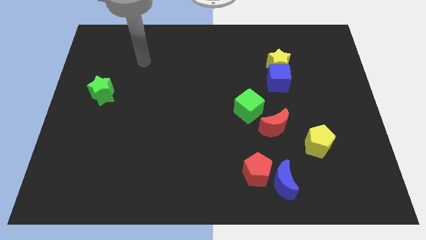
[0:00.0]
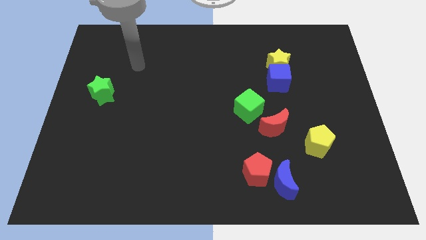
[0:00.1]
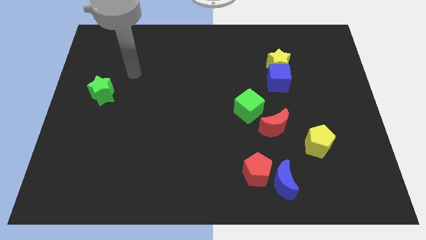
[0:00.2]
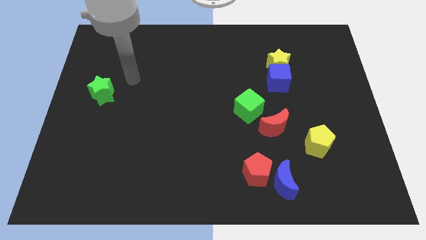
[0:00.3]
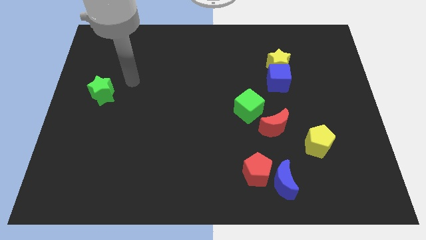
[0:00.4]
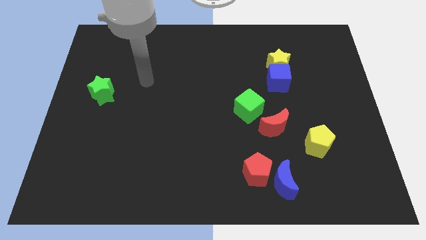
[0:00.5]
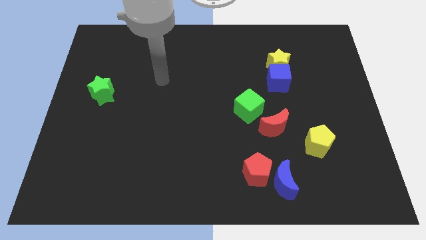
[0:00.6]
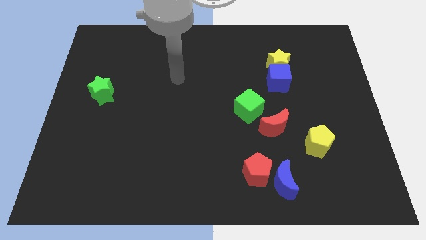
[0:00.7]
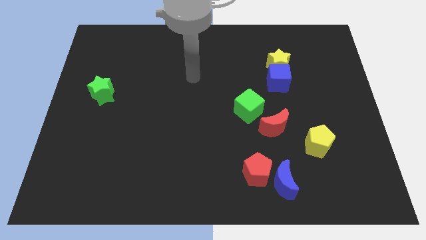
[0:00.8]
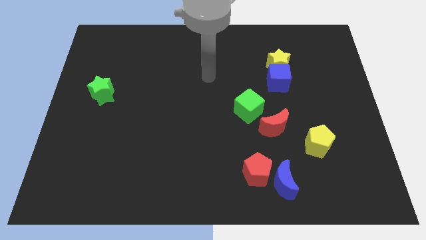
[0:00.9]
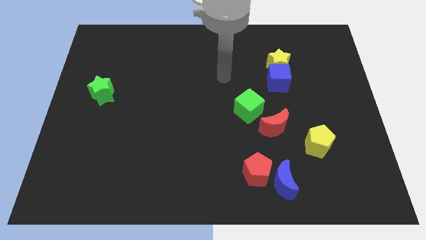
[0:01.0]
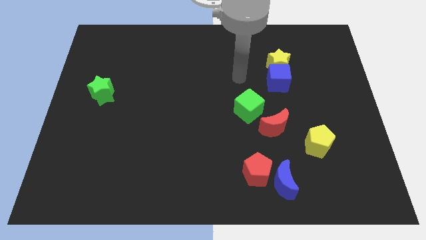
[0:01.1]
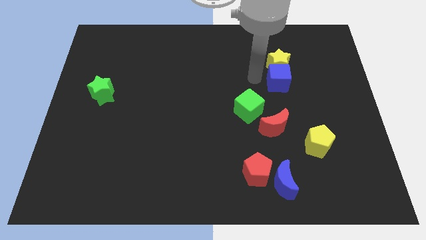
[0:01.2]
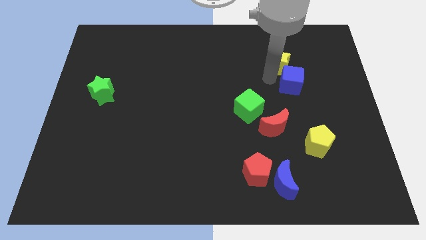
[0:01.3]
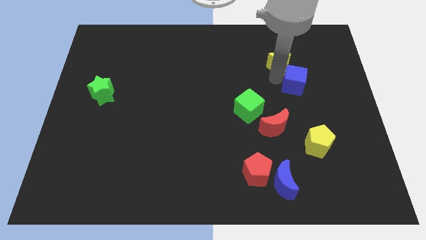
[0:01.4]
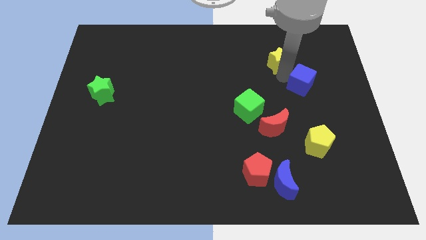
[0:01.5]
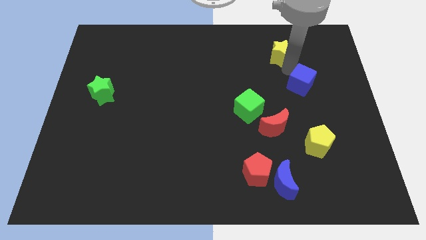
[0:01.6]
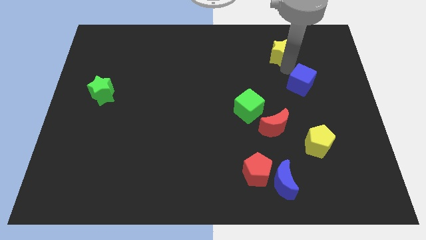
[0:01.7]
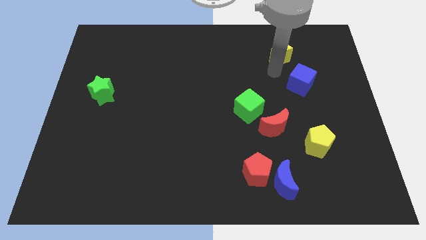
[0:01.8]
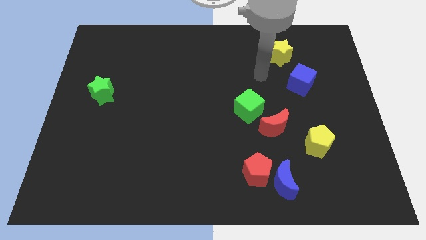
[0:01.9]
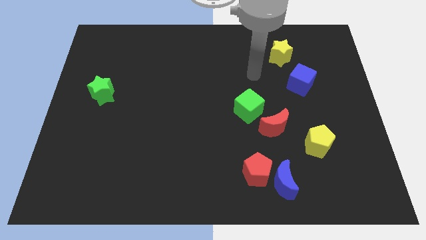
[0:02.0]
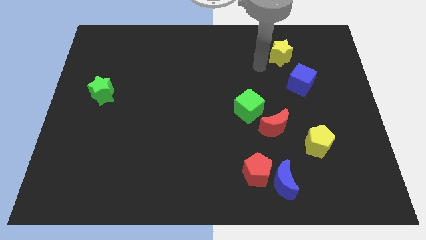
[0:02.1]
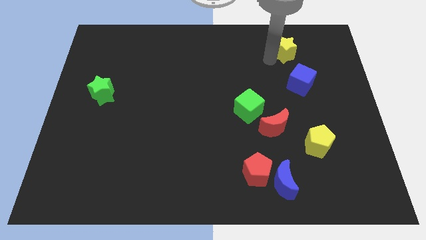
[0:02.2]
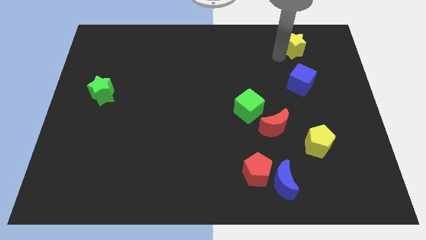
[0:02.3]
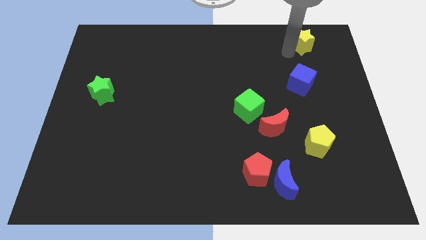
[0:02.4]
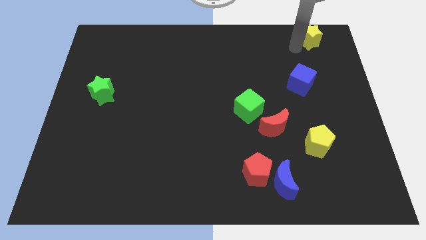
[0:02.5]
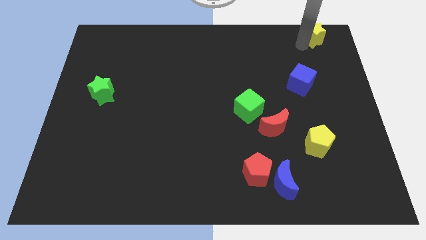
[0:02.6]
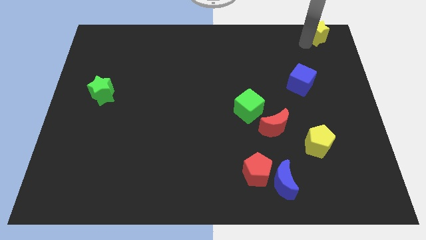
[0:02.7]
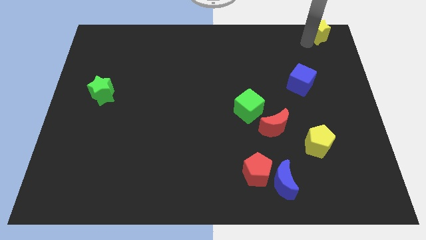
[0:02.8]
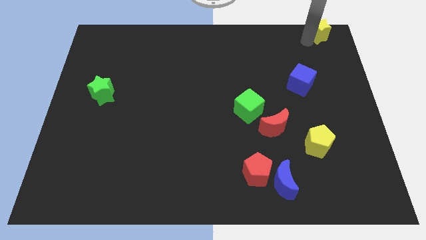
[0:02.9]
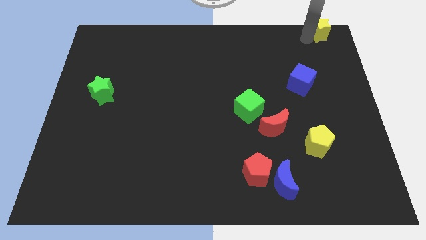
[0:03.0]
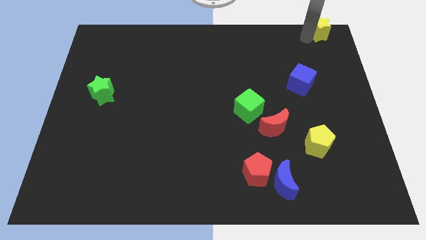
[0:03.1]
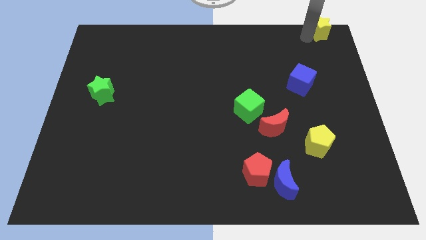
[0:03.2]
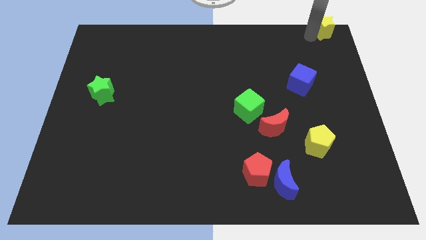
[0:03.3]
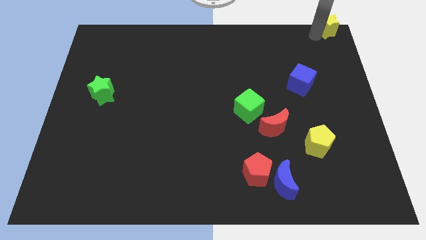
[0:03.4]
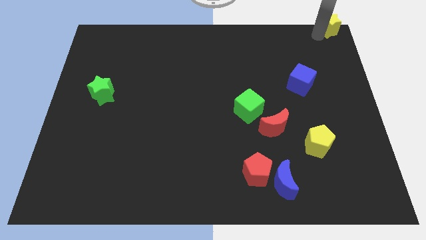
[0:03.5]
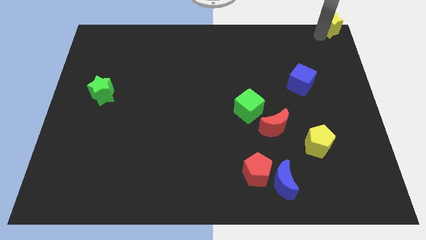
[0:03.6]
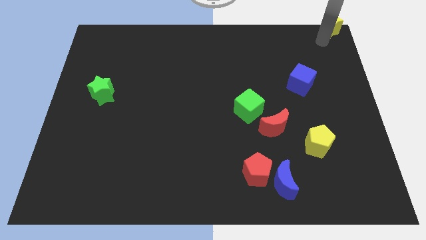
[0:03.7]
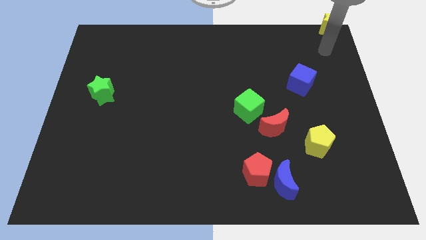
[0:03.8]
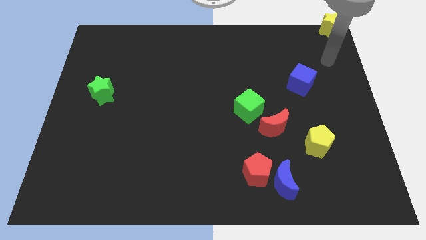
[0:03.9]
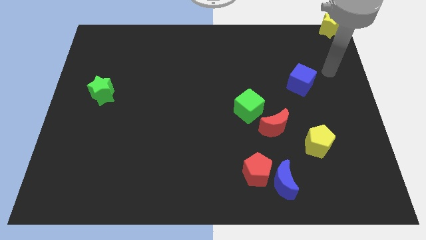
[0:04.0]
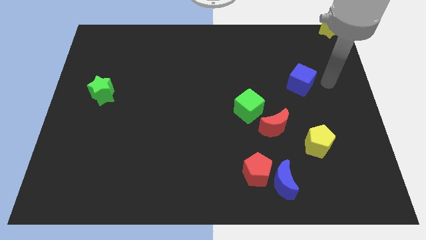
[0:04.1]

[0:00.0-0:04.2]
place yellow star on top right corner of the board

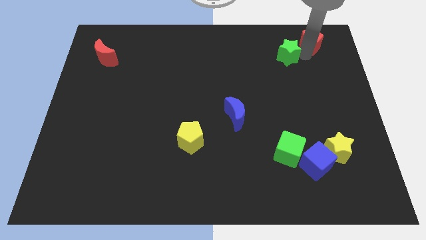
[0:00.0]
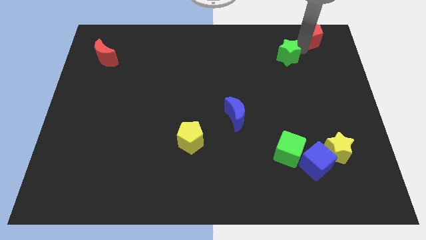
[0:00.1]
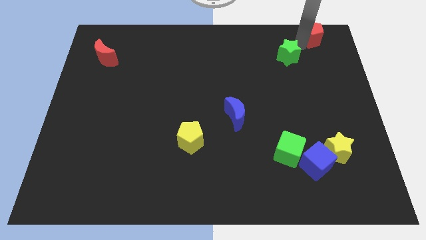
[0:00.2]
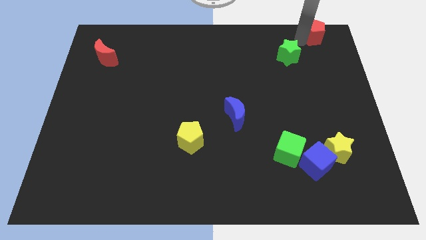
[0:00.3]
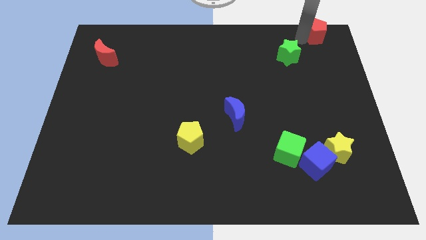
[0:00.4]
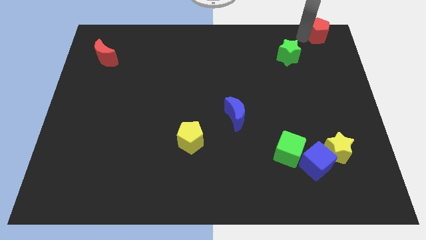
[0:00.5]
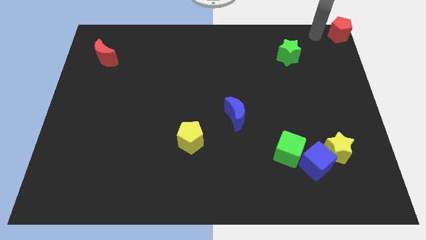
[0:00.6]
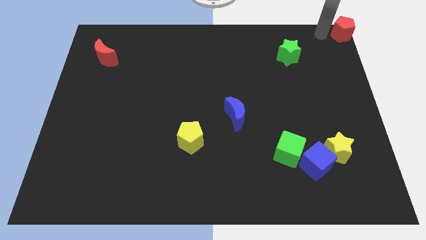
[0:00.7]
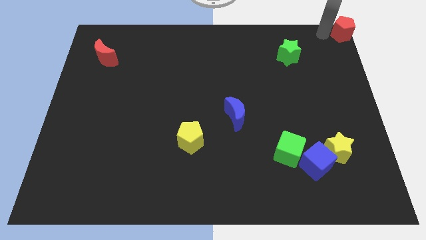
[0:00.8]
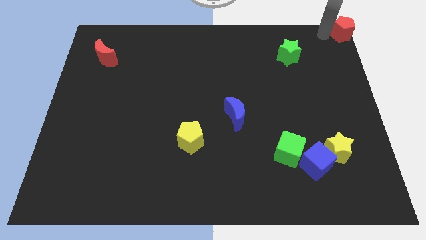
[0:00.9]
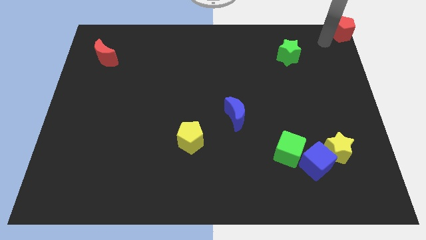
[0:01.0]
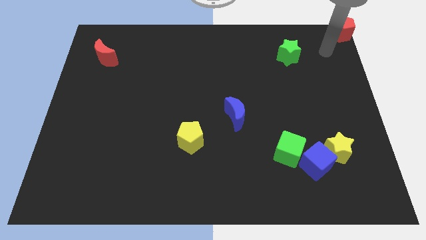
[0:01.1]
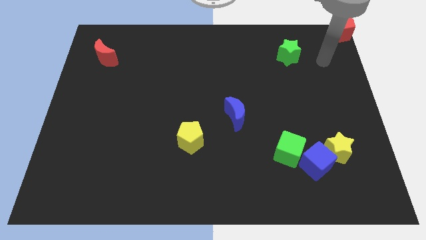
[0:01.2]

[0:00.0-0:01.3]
push red pentagon to top right corner

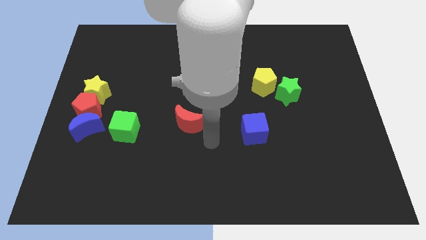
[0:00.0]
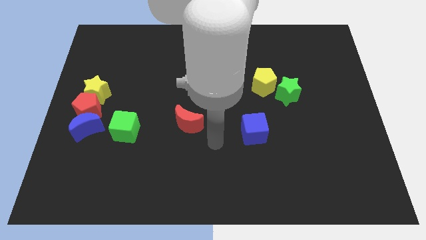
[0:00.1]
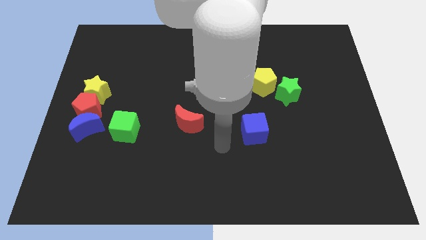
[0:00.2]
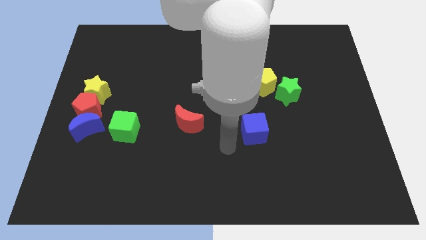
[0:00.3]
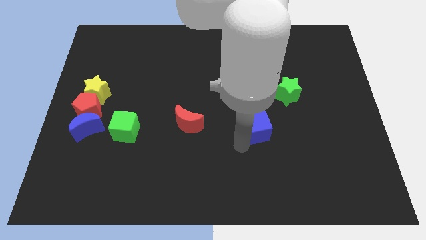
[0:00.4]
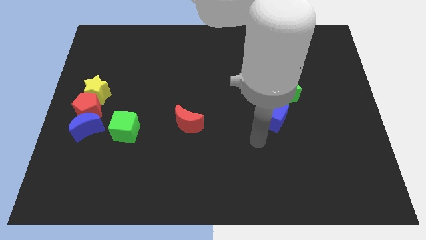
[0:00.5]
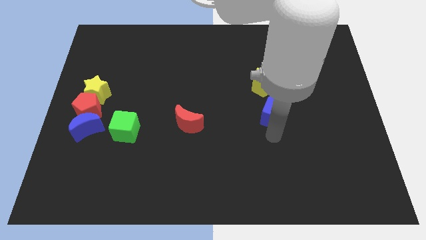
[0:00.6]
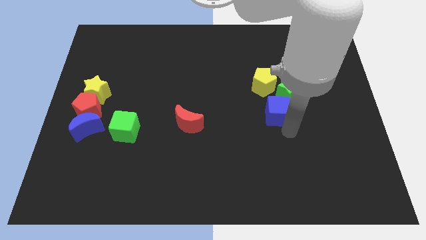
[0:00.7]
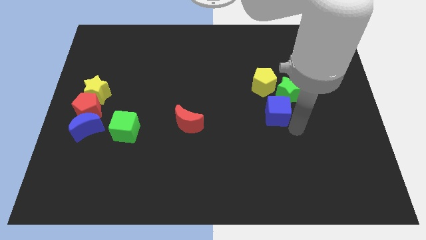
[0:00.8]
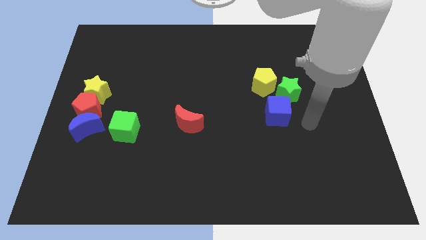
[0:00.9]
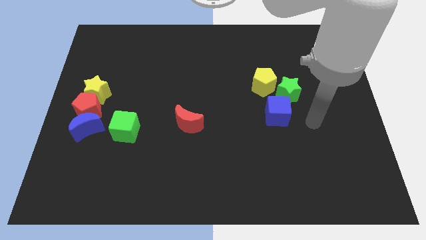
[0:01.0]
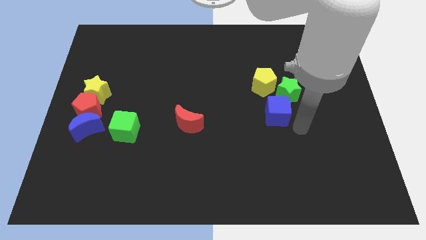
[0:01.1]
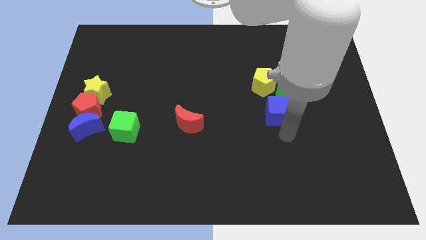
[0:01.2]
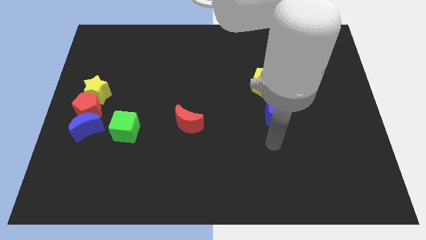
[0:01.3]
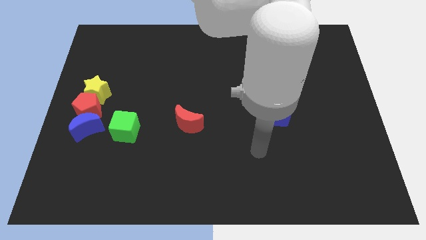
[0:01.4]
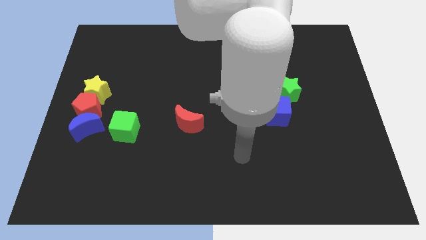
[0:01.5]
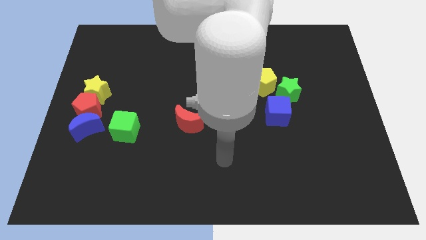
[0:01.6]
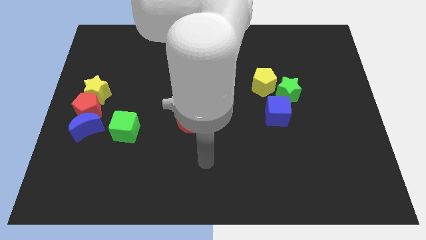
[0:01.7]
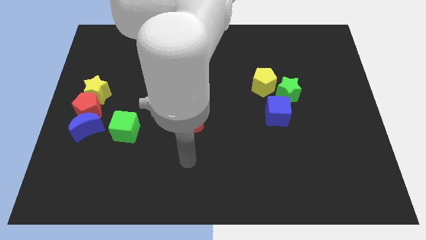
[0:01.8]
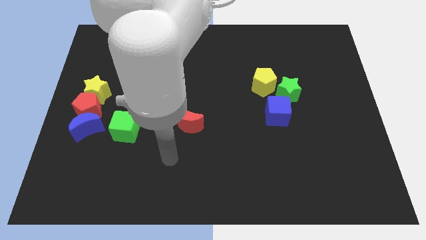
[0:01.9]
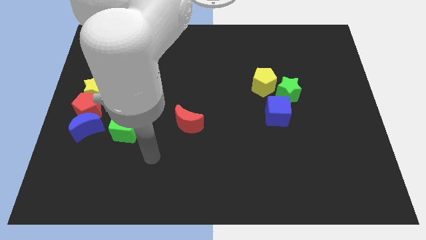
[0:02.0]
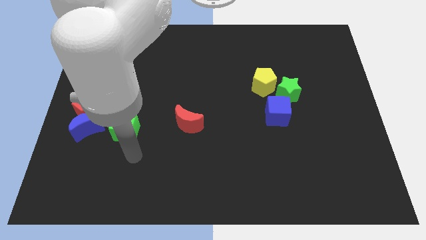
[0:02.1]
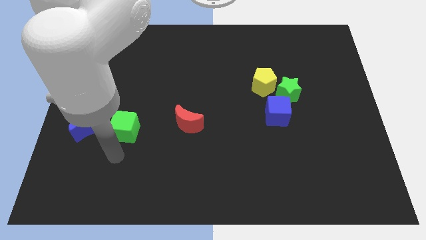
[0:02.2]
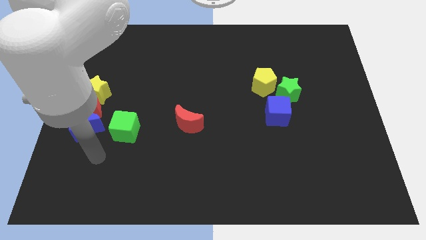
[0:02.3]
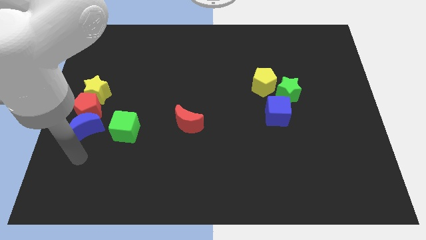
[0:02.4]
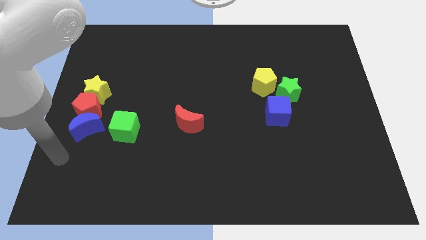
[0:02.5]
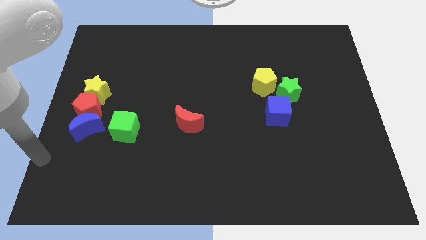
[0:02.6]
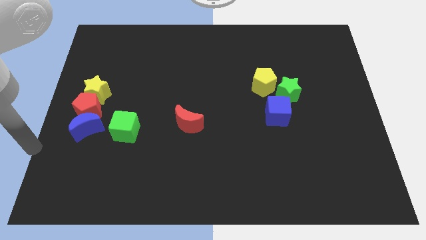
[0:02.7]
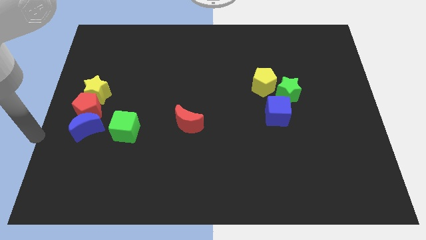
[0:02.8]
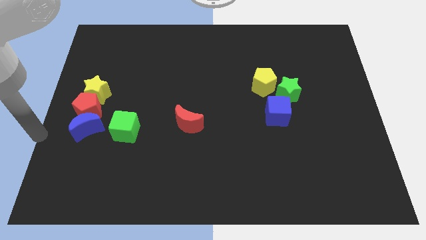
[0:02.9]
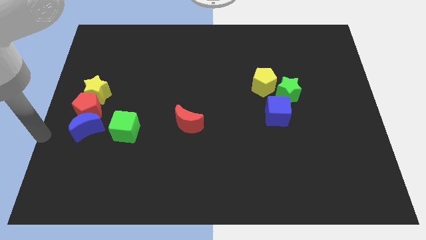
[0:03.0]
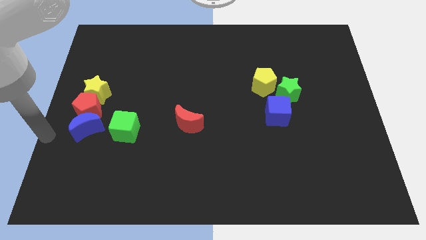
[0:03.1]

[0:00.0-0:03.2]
push the blue cube upward

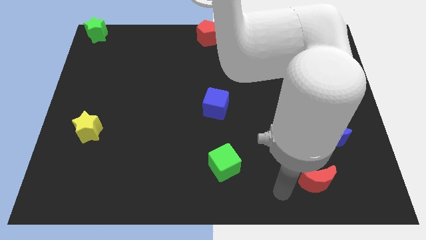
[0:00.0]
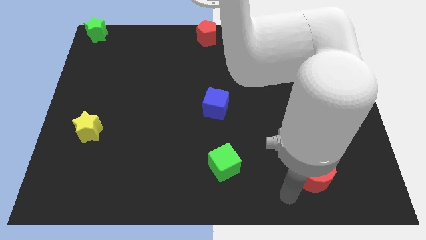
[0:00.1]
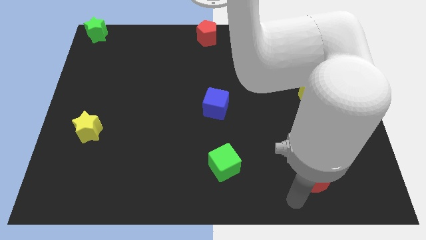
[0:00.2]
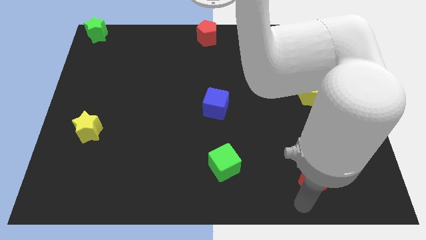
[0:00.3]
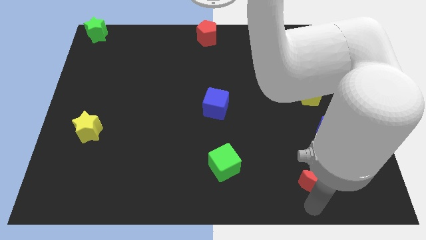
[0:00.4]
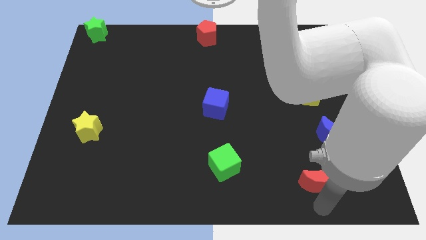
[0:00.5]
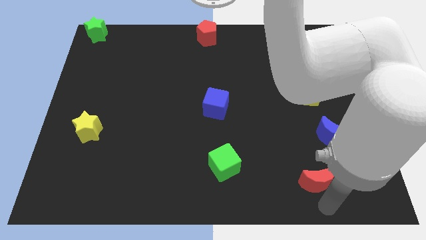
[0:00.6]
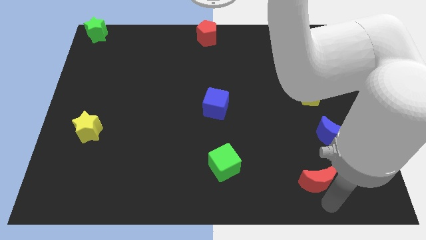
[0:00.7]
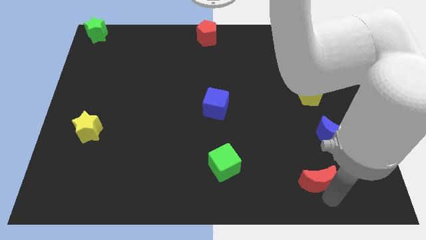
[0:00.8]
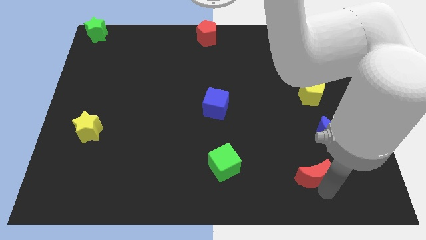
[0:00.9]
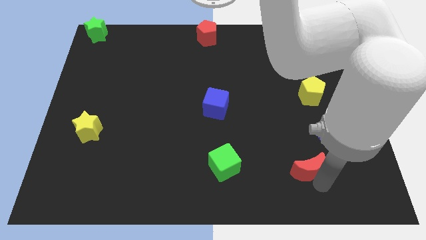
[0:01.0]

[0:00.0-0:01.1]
place the red crescent diagonally to red pentagon
